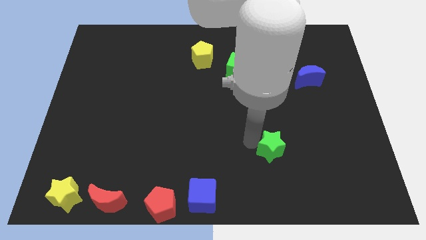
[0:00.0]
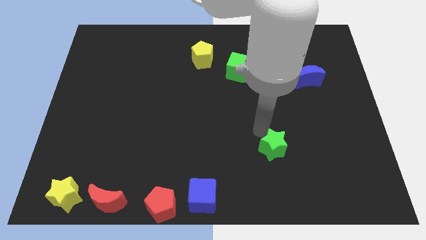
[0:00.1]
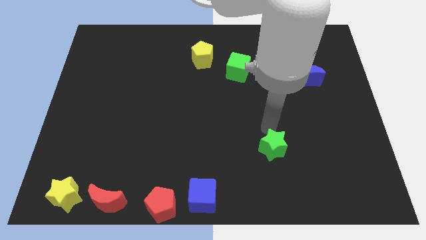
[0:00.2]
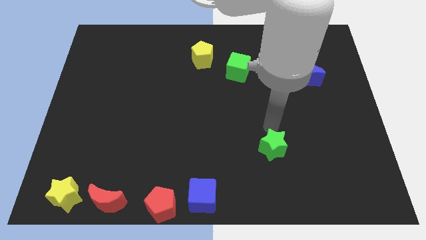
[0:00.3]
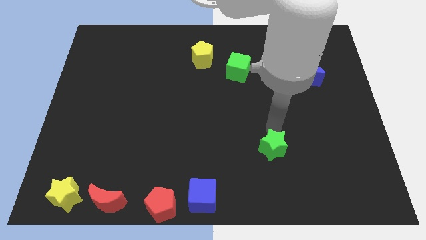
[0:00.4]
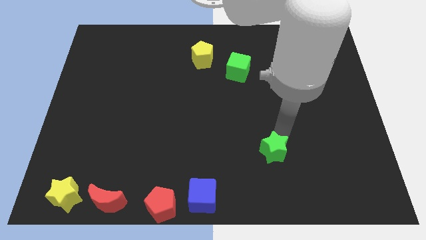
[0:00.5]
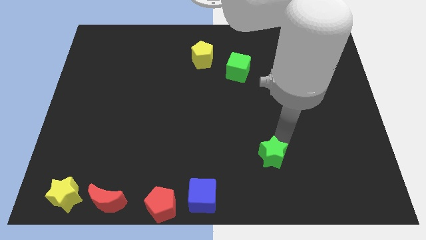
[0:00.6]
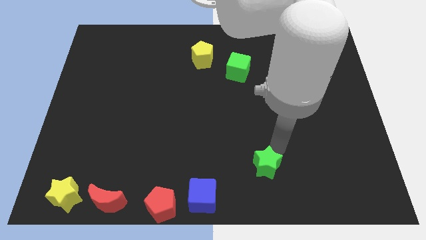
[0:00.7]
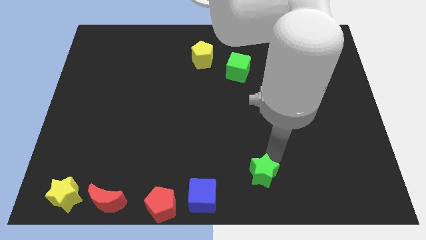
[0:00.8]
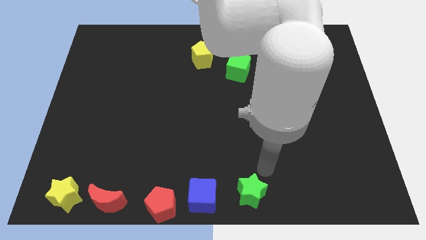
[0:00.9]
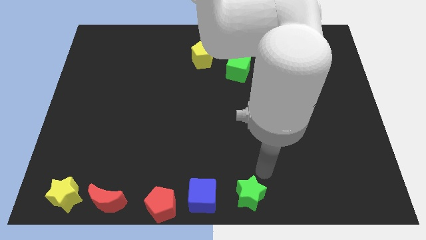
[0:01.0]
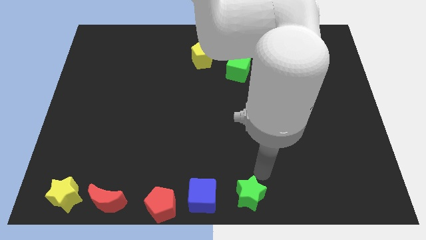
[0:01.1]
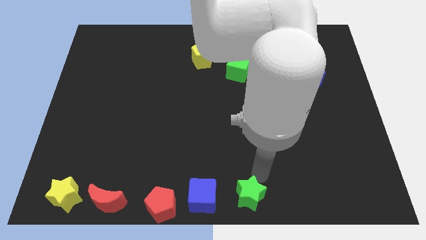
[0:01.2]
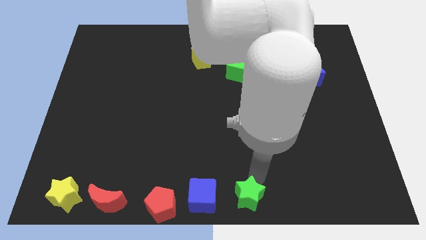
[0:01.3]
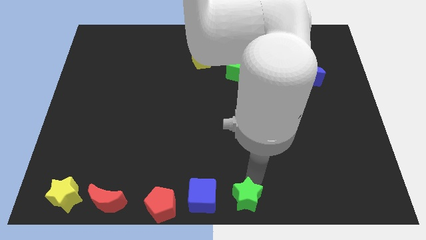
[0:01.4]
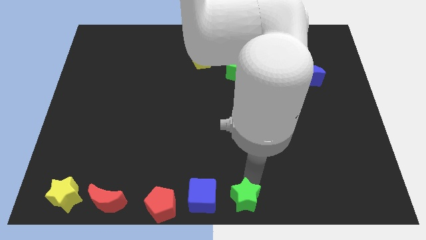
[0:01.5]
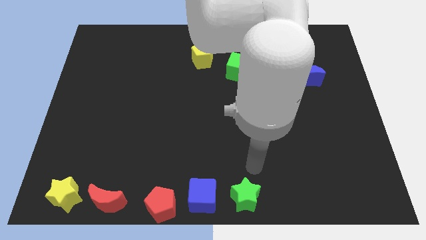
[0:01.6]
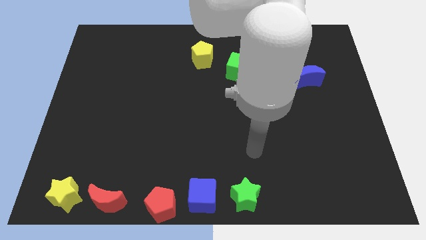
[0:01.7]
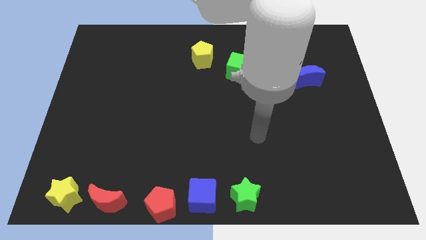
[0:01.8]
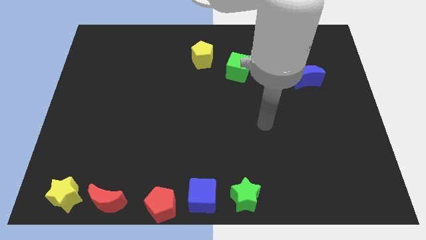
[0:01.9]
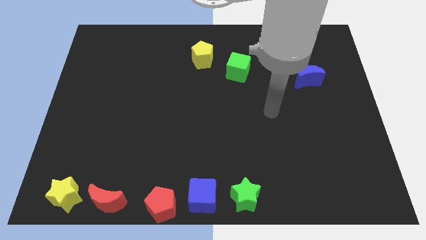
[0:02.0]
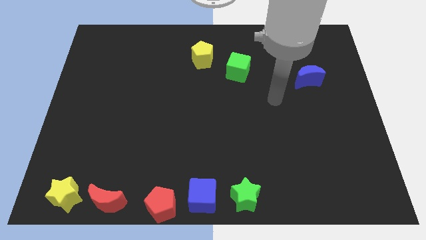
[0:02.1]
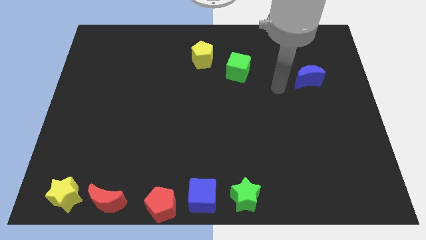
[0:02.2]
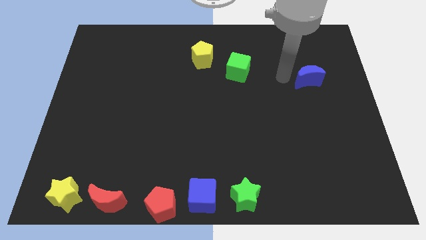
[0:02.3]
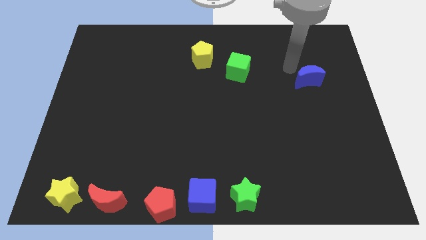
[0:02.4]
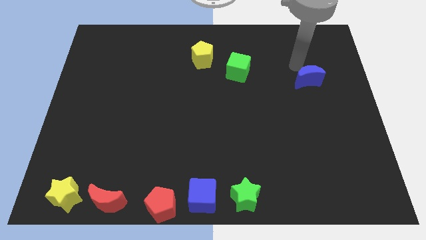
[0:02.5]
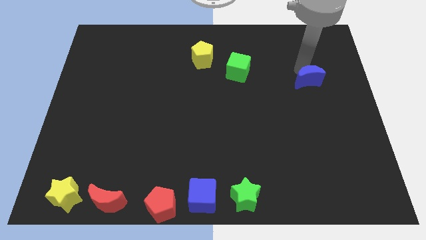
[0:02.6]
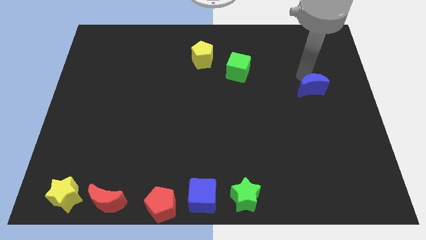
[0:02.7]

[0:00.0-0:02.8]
move the green star to the right side of the blue cube

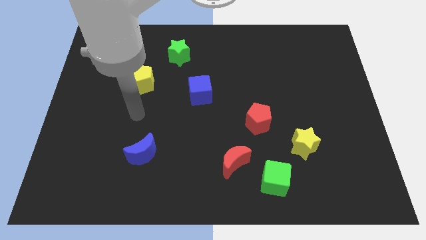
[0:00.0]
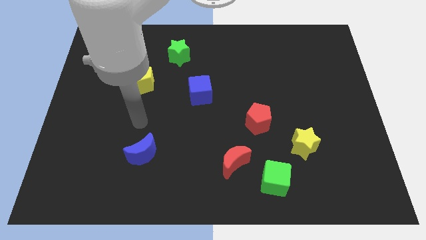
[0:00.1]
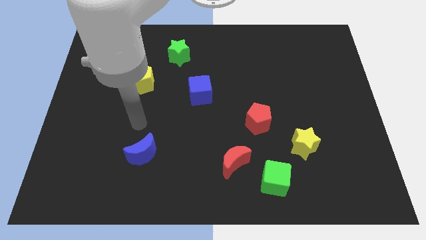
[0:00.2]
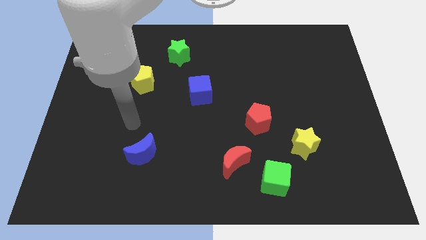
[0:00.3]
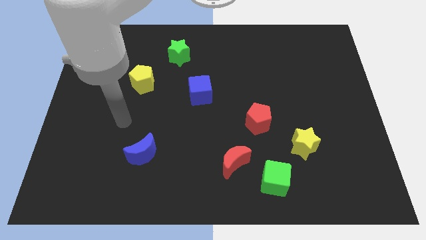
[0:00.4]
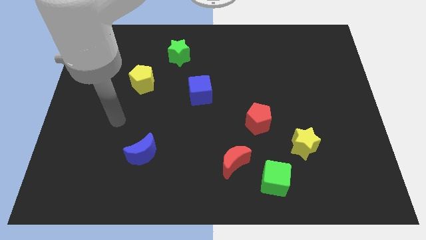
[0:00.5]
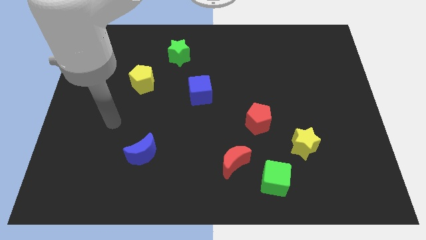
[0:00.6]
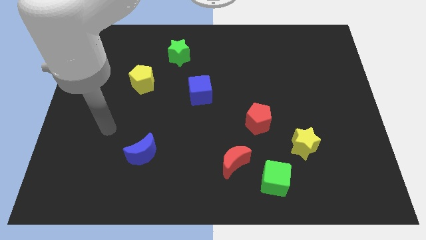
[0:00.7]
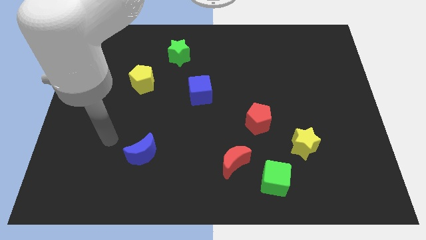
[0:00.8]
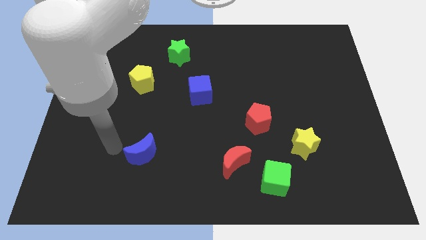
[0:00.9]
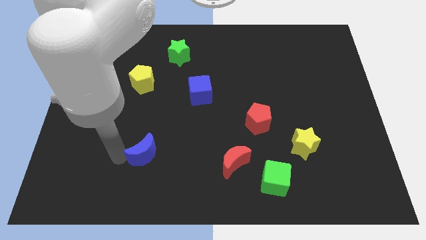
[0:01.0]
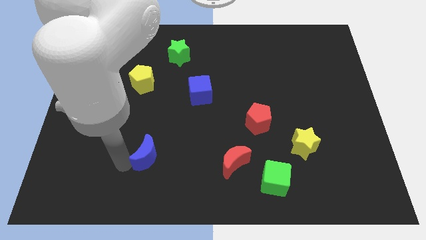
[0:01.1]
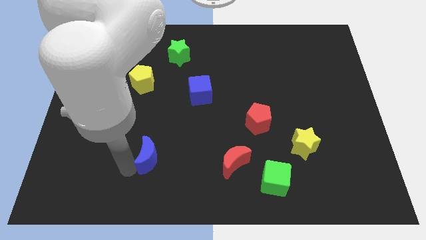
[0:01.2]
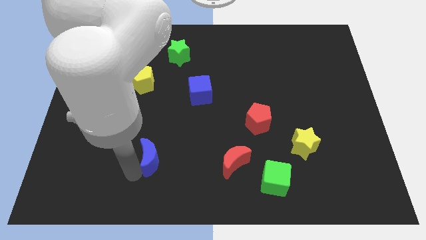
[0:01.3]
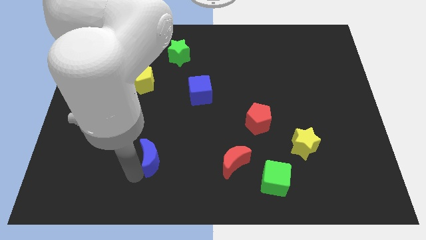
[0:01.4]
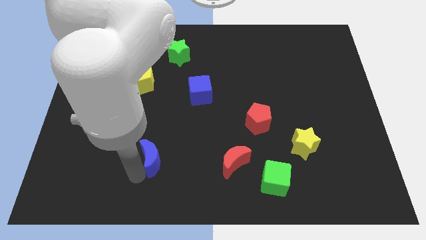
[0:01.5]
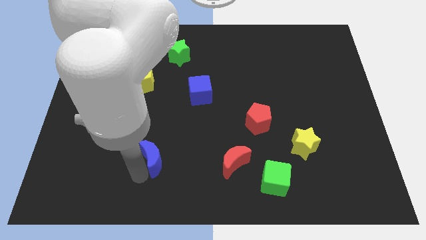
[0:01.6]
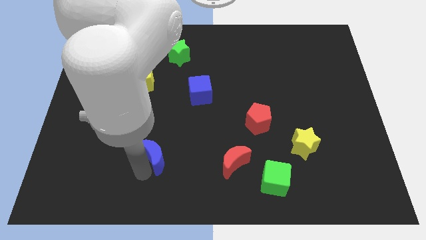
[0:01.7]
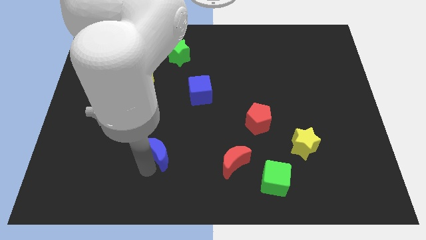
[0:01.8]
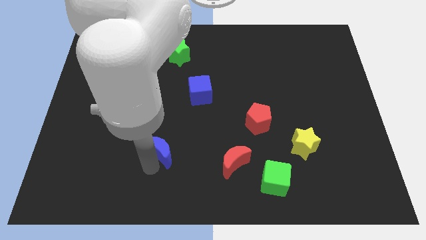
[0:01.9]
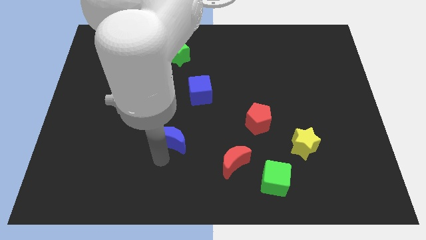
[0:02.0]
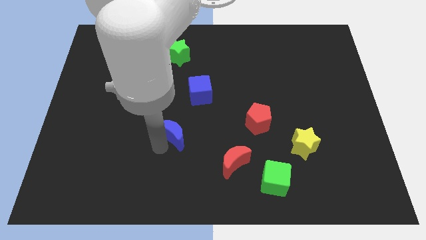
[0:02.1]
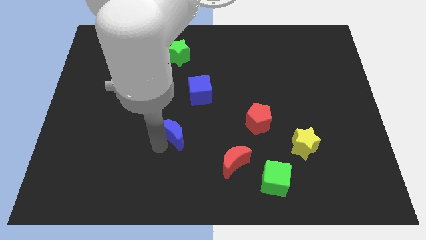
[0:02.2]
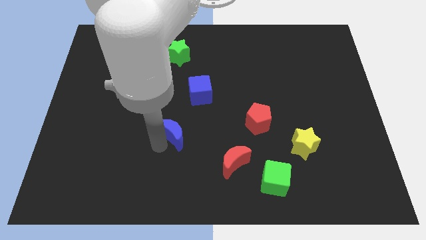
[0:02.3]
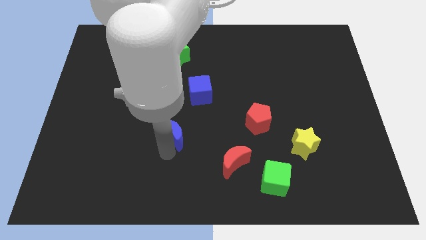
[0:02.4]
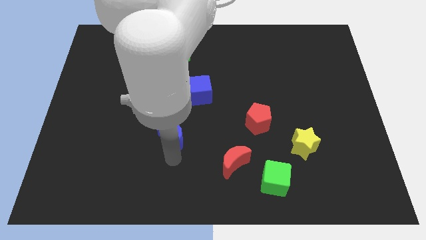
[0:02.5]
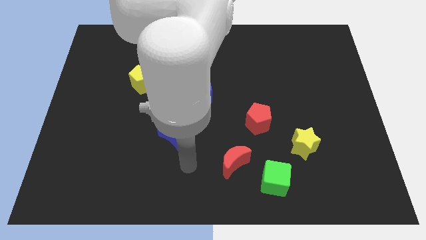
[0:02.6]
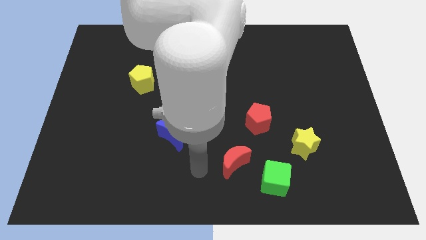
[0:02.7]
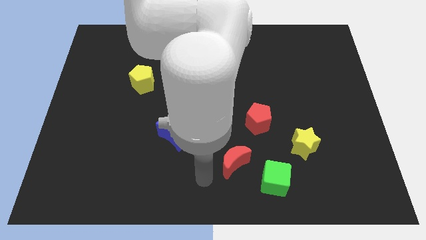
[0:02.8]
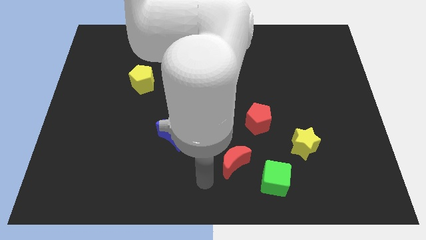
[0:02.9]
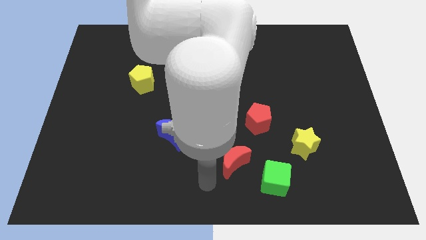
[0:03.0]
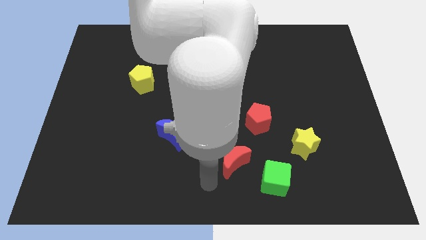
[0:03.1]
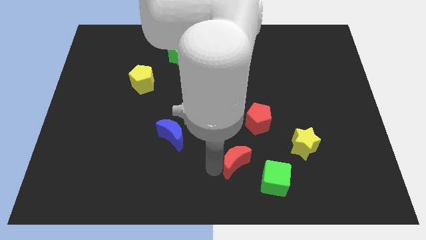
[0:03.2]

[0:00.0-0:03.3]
move the blue crescent to the bottom left side of the blue cube

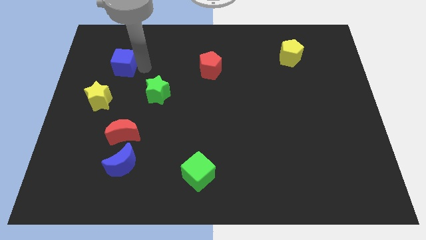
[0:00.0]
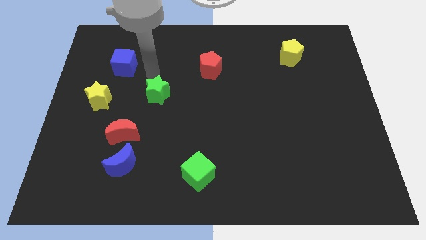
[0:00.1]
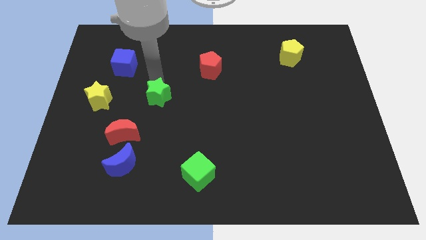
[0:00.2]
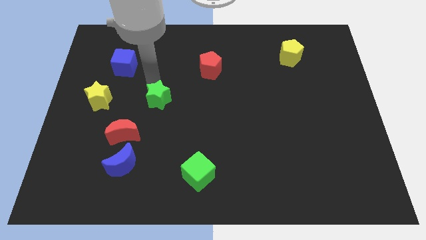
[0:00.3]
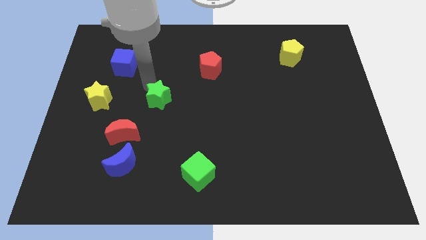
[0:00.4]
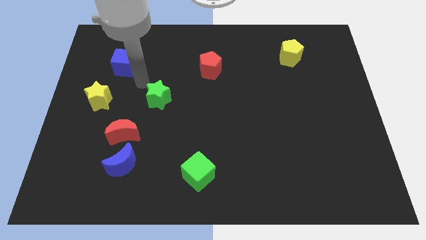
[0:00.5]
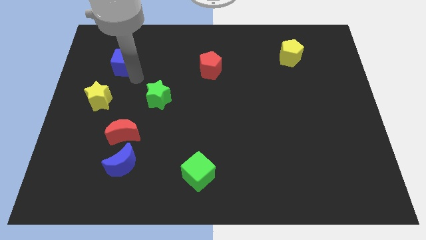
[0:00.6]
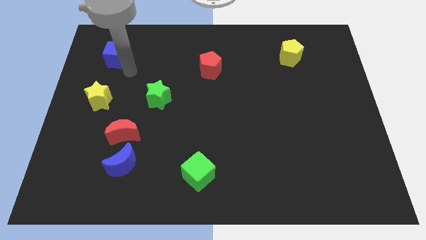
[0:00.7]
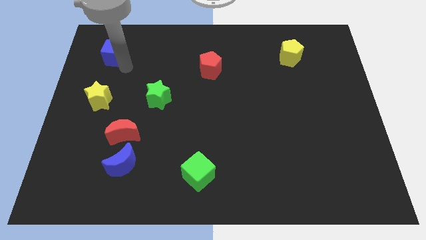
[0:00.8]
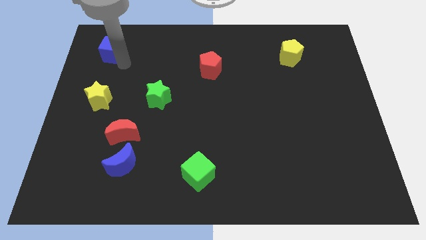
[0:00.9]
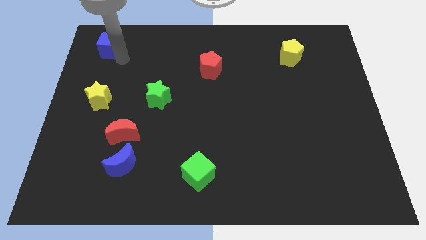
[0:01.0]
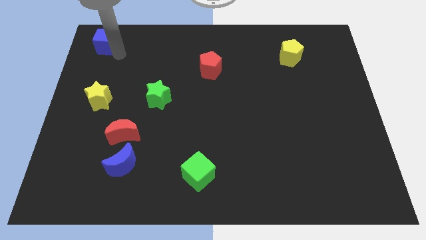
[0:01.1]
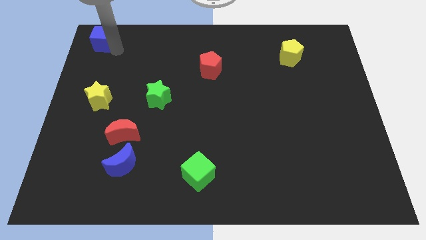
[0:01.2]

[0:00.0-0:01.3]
place blue cube to the top of yellow star

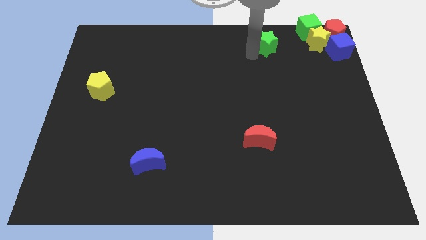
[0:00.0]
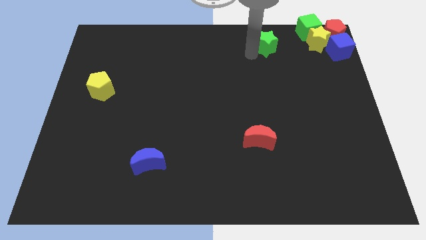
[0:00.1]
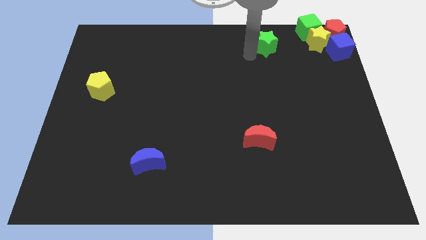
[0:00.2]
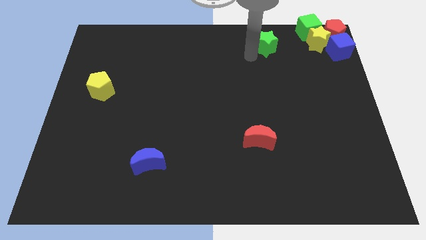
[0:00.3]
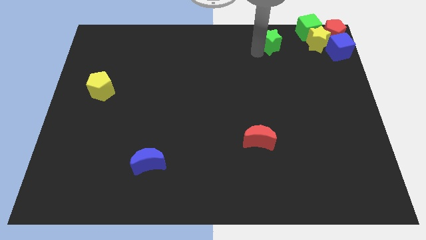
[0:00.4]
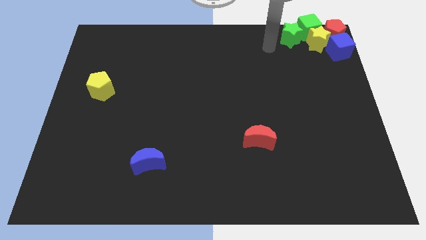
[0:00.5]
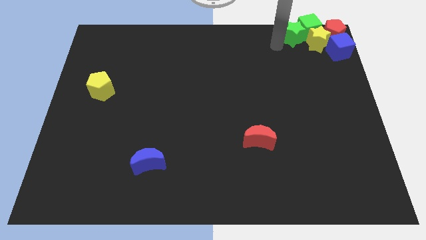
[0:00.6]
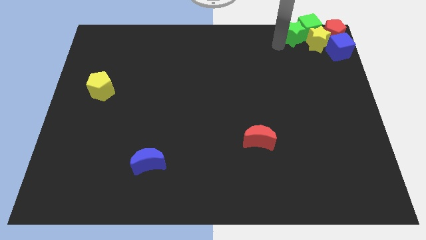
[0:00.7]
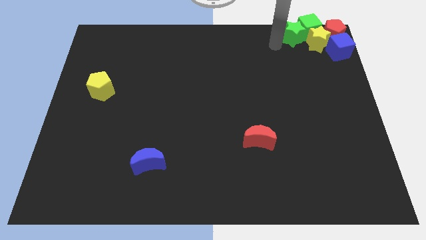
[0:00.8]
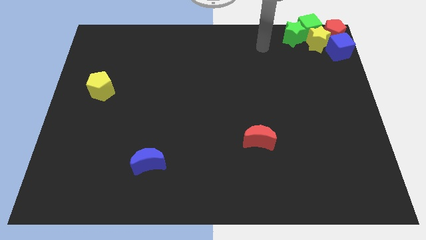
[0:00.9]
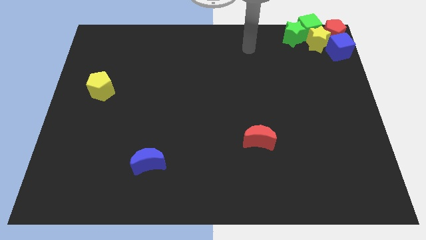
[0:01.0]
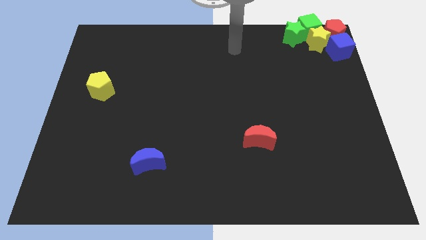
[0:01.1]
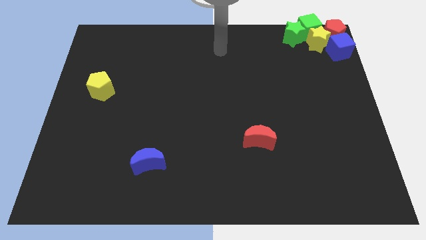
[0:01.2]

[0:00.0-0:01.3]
push the green star into the green cube

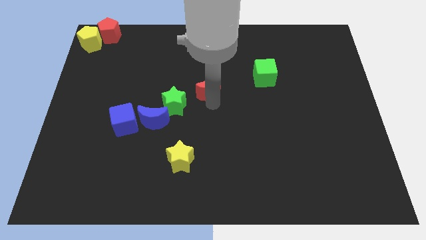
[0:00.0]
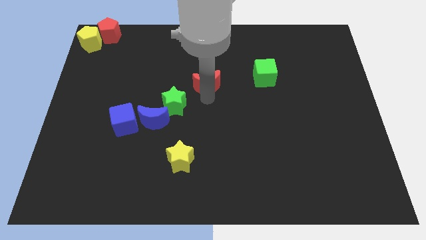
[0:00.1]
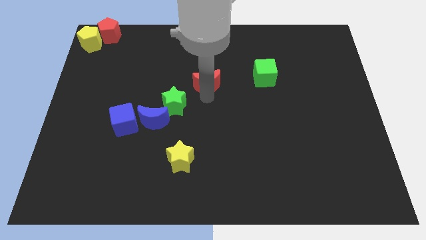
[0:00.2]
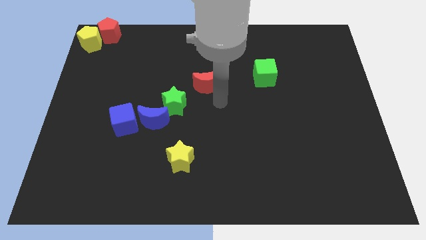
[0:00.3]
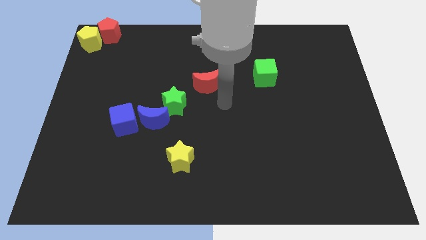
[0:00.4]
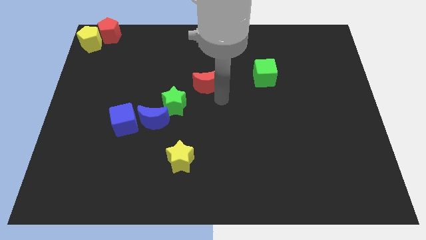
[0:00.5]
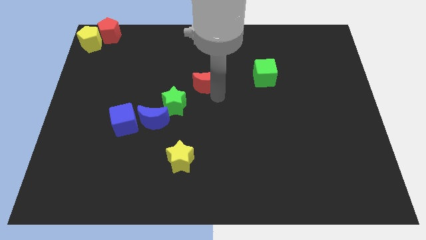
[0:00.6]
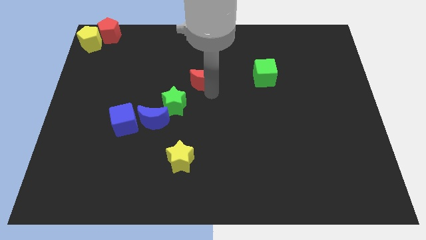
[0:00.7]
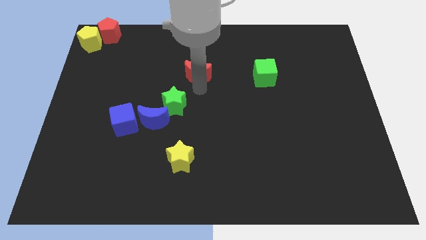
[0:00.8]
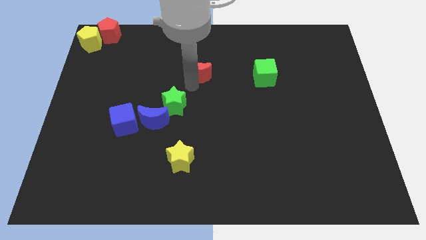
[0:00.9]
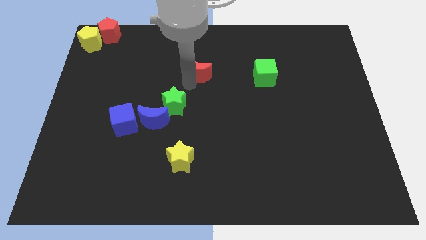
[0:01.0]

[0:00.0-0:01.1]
put the red crescent to the left of the green cube
